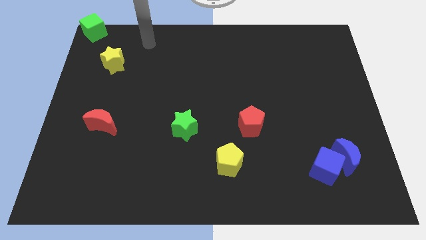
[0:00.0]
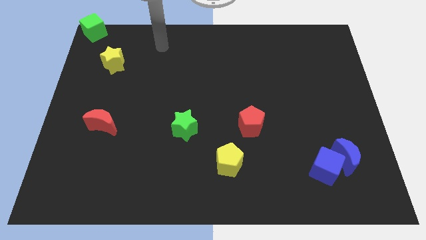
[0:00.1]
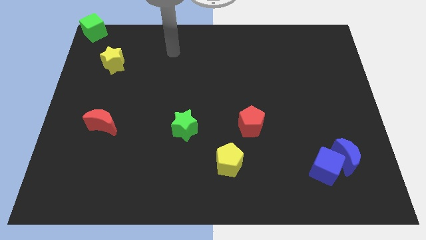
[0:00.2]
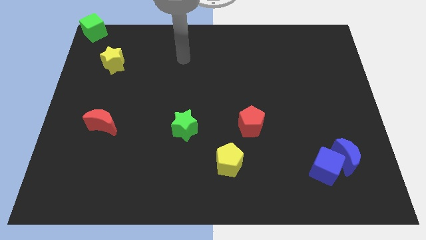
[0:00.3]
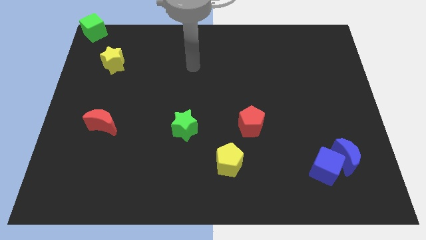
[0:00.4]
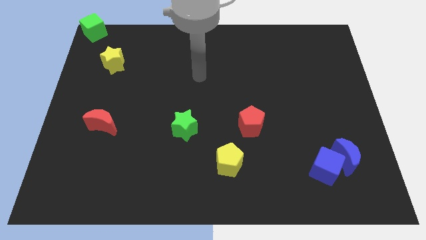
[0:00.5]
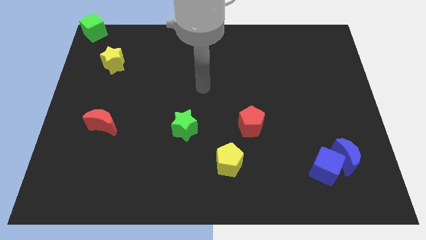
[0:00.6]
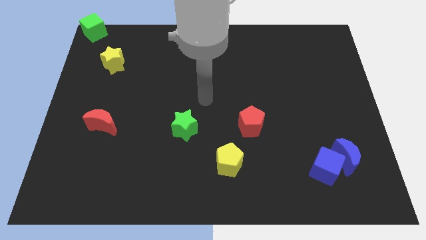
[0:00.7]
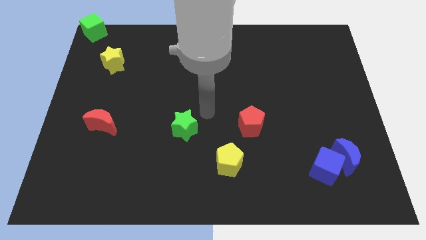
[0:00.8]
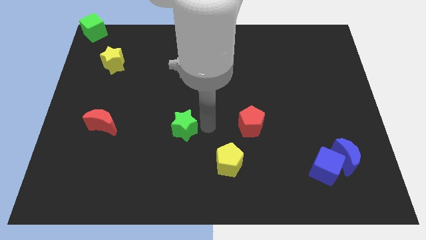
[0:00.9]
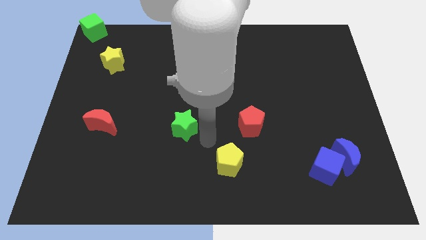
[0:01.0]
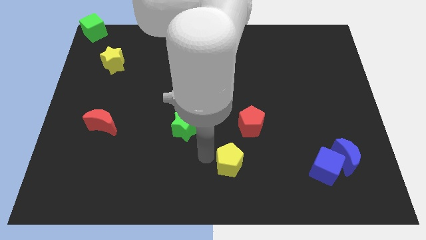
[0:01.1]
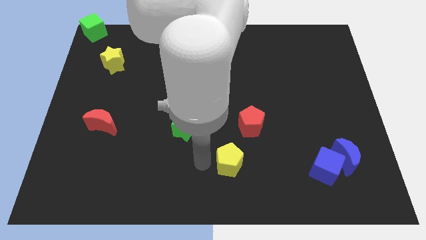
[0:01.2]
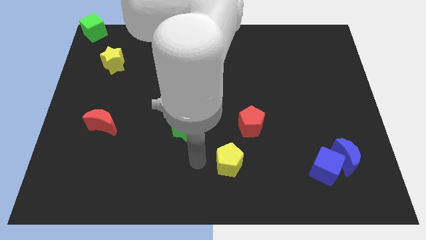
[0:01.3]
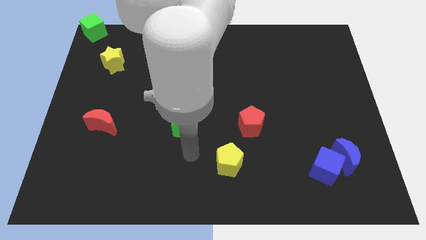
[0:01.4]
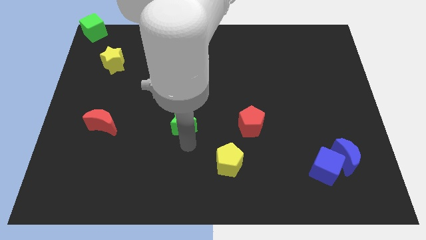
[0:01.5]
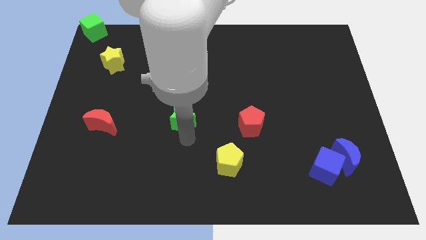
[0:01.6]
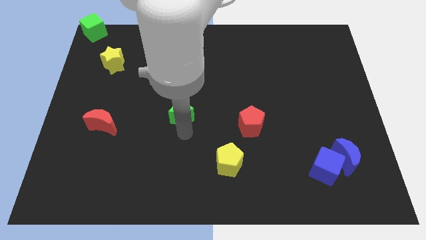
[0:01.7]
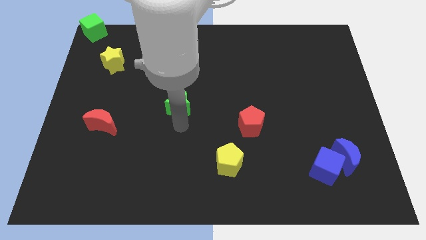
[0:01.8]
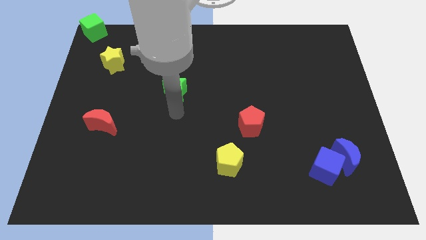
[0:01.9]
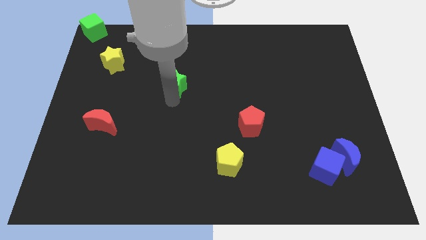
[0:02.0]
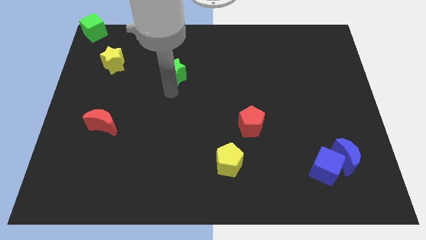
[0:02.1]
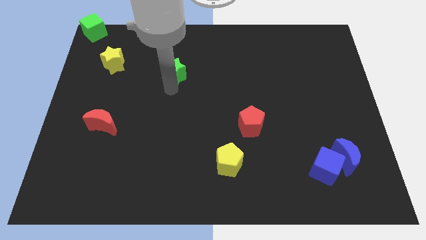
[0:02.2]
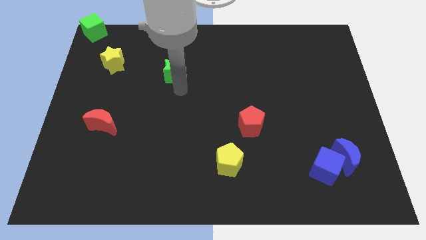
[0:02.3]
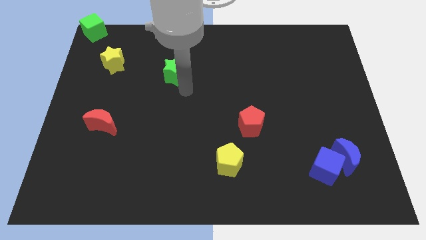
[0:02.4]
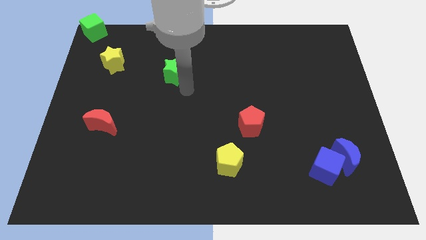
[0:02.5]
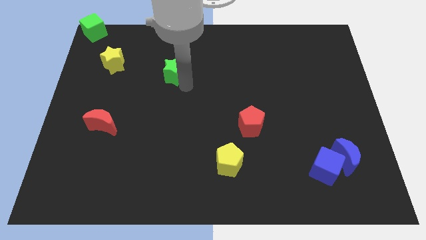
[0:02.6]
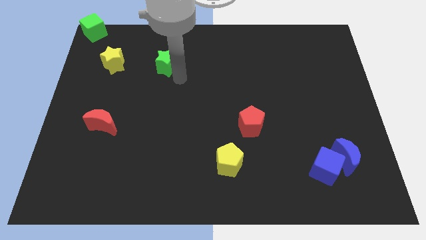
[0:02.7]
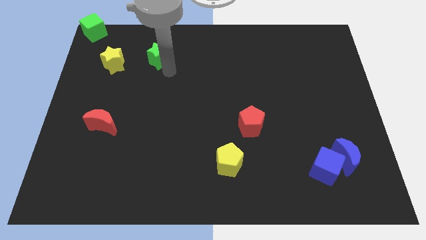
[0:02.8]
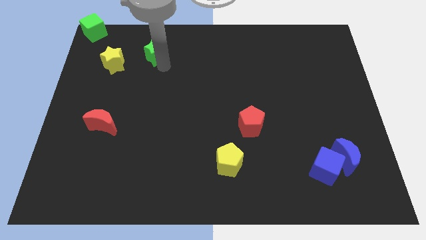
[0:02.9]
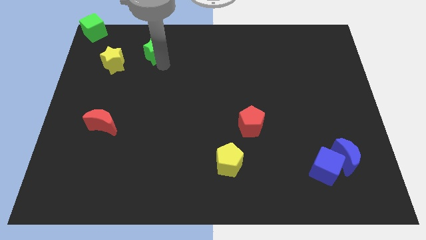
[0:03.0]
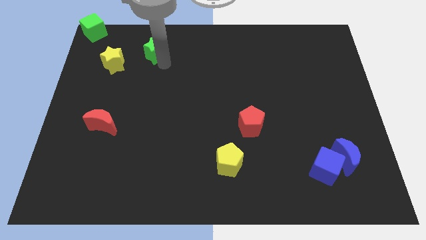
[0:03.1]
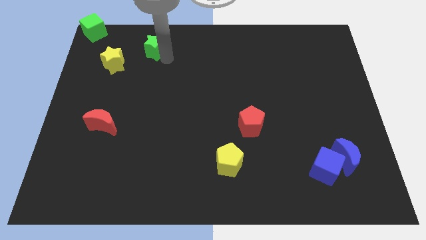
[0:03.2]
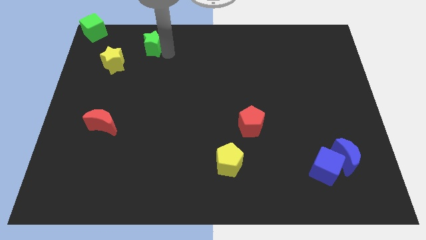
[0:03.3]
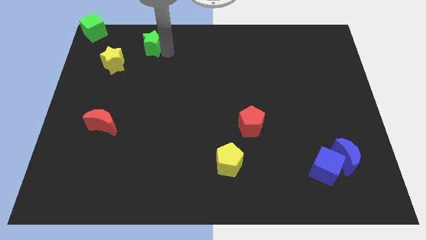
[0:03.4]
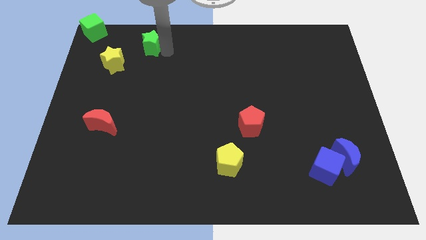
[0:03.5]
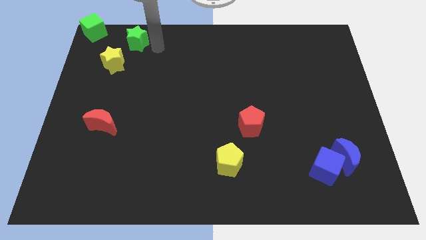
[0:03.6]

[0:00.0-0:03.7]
move the green star diagonally on the top right side of the yellow star

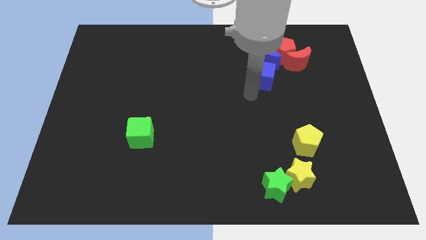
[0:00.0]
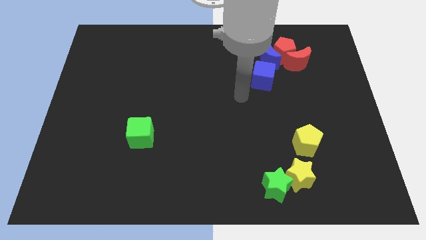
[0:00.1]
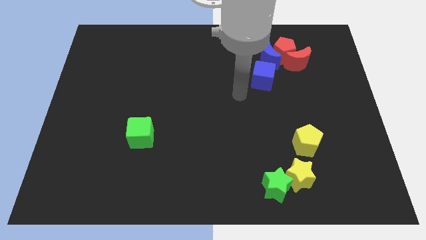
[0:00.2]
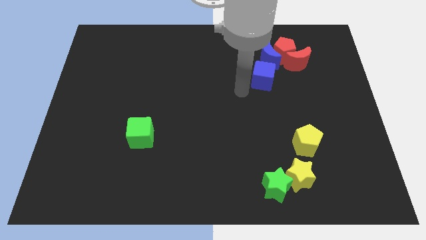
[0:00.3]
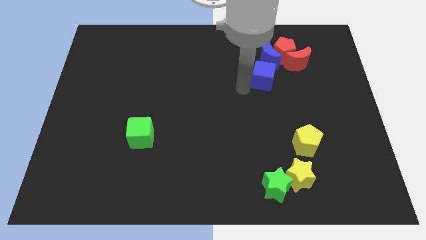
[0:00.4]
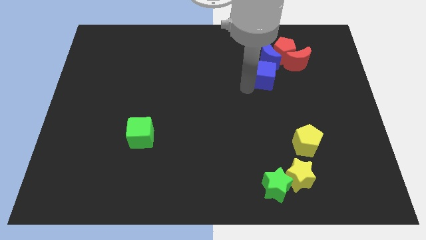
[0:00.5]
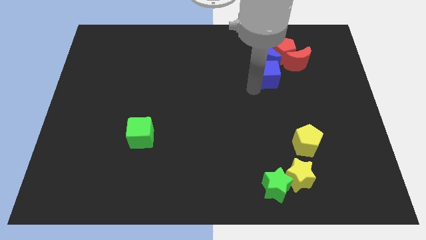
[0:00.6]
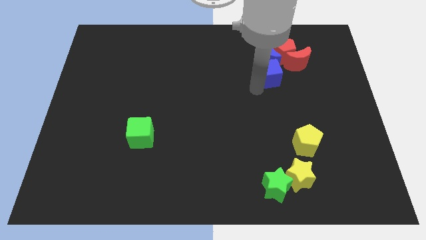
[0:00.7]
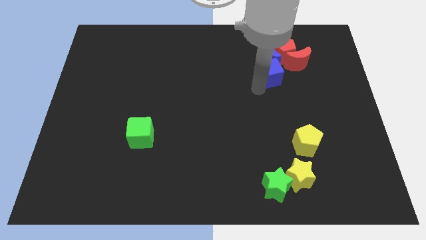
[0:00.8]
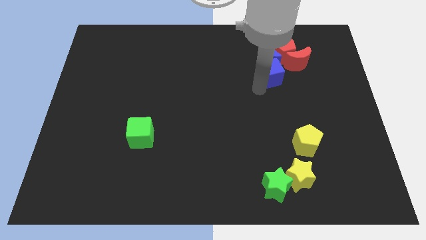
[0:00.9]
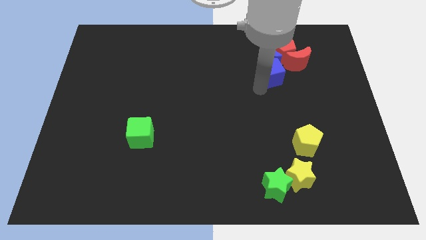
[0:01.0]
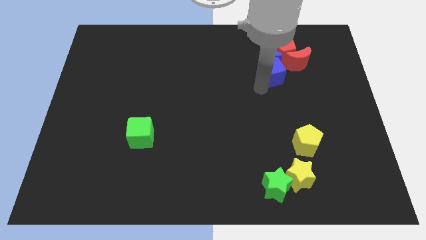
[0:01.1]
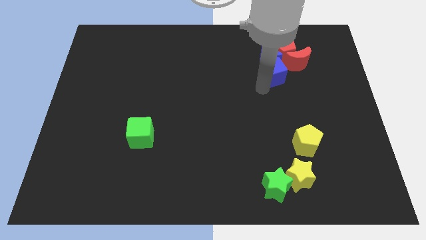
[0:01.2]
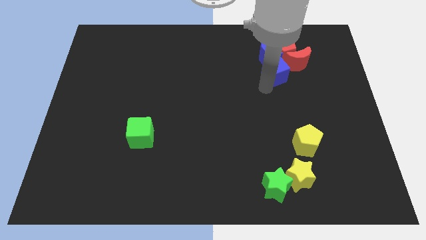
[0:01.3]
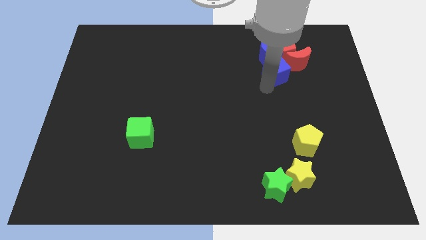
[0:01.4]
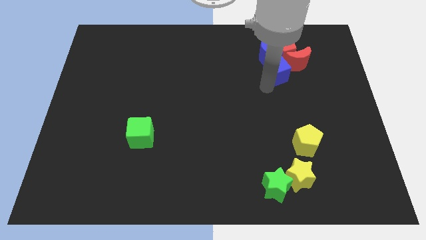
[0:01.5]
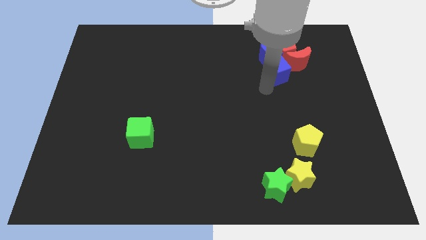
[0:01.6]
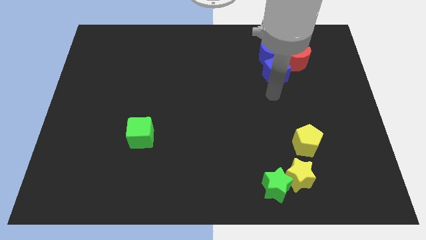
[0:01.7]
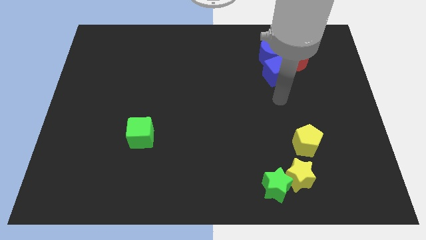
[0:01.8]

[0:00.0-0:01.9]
push blue cube into the blue crescent

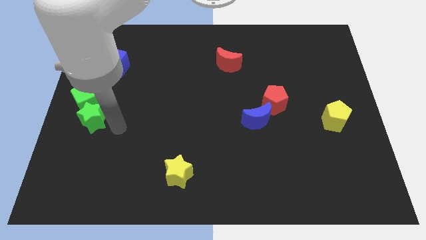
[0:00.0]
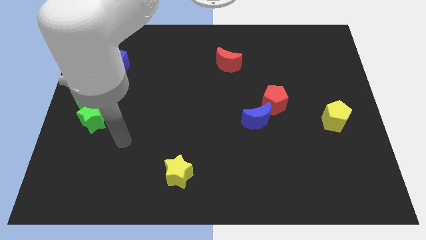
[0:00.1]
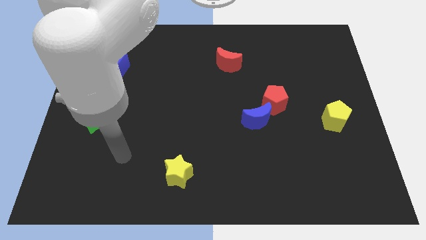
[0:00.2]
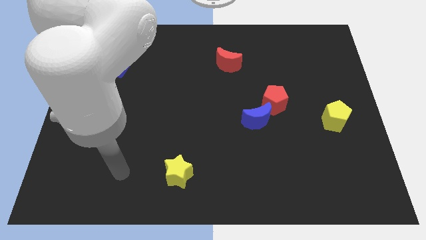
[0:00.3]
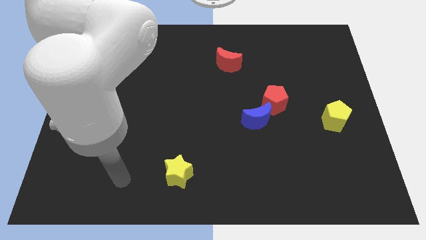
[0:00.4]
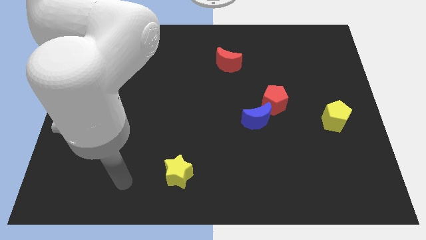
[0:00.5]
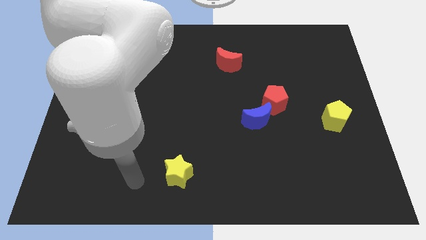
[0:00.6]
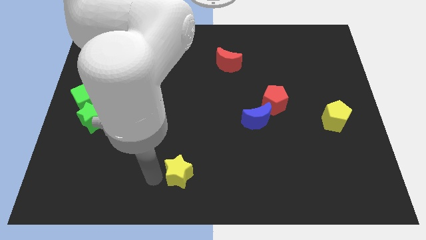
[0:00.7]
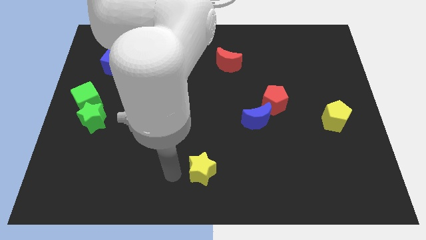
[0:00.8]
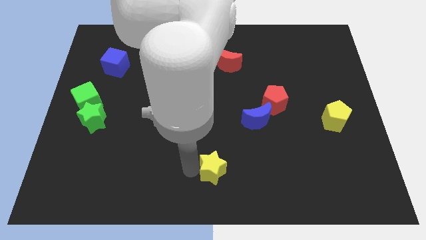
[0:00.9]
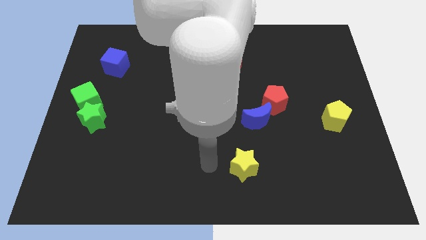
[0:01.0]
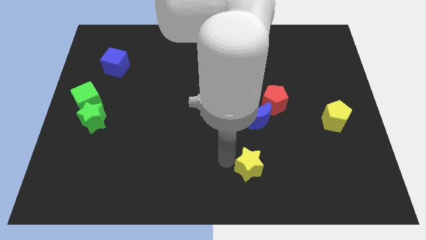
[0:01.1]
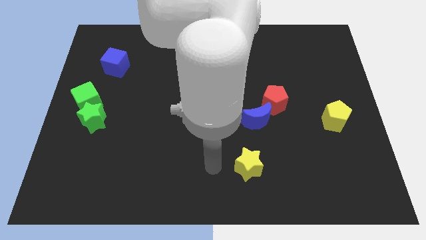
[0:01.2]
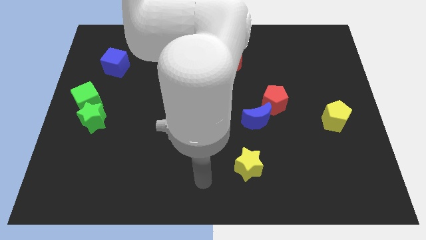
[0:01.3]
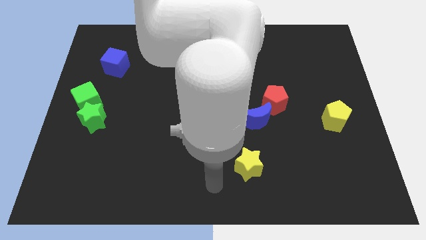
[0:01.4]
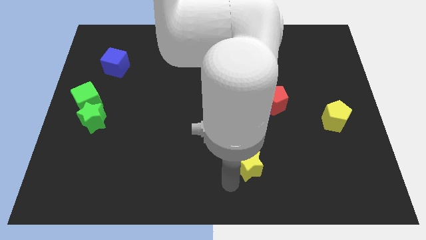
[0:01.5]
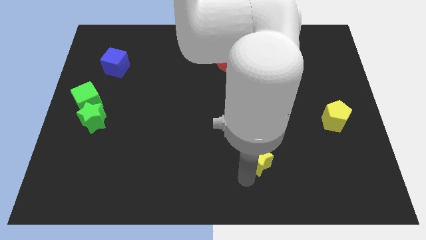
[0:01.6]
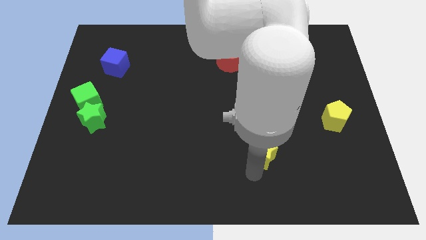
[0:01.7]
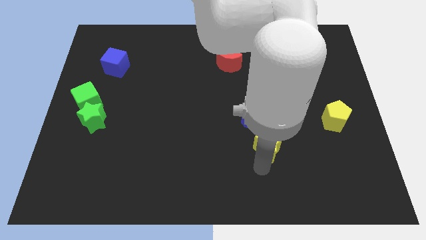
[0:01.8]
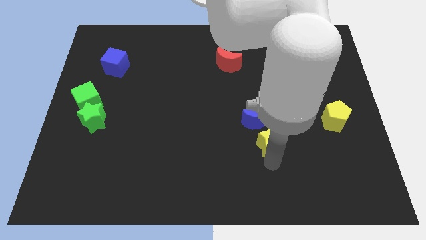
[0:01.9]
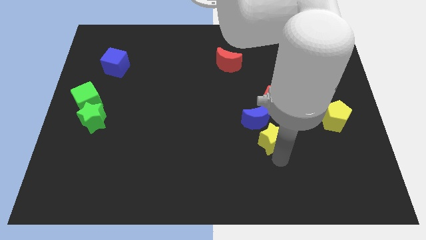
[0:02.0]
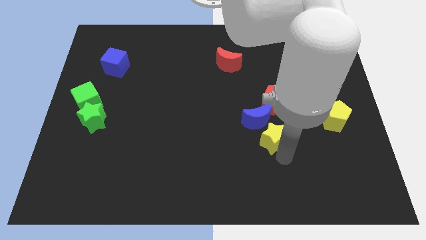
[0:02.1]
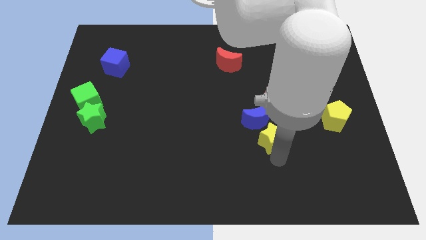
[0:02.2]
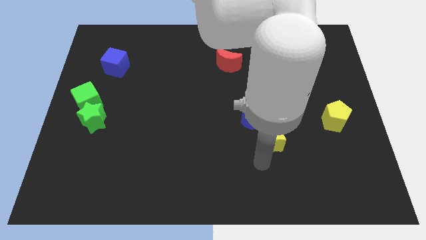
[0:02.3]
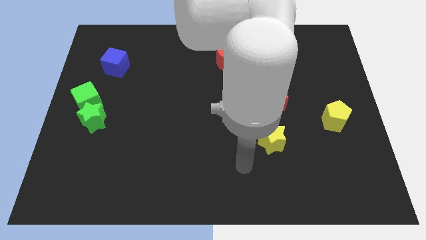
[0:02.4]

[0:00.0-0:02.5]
place the yellow star below the blue crescent

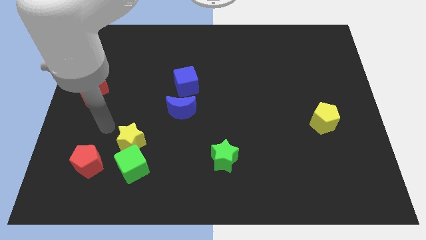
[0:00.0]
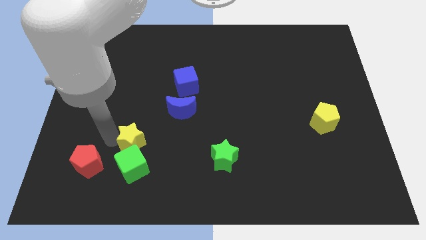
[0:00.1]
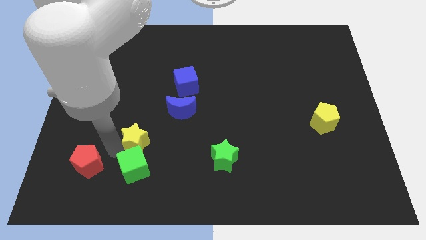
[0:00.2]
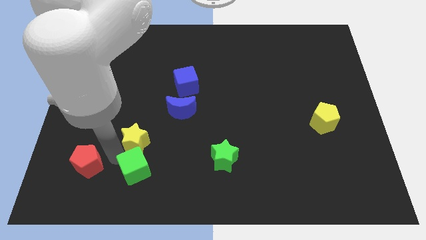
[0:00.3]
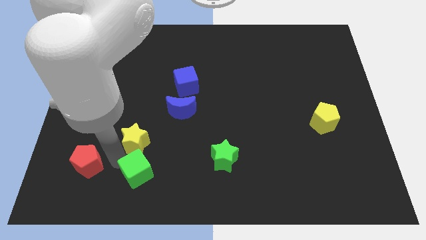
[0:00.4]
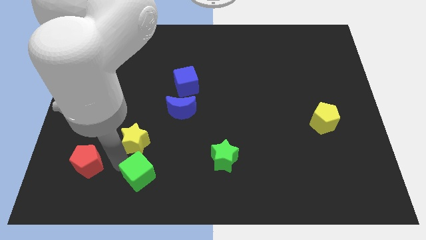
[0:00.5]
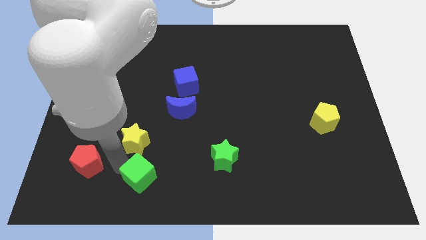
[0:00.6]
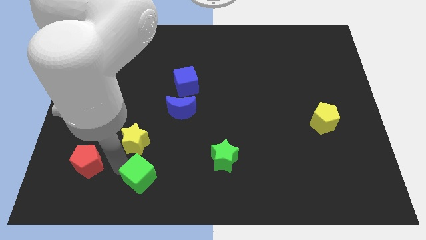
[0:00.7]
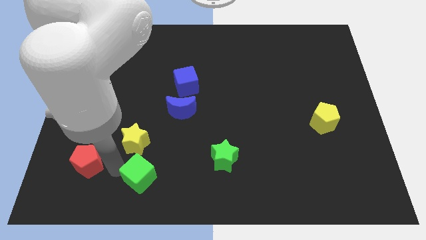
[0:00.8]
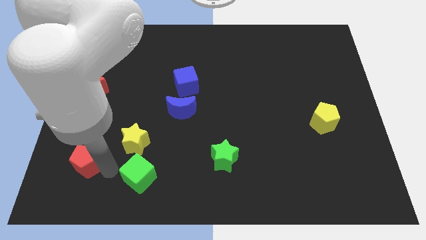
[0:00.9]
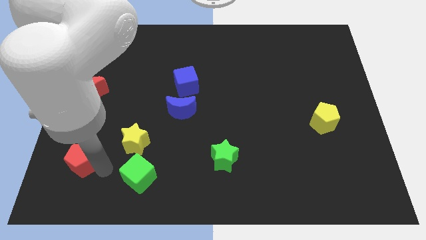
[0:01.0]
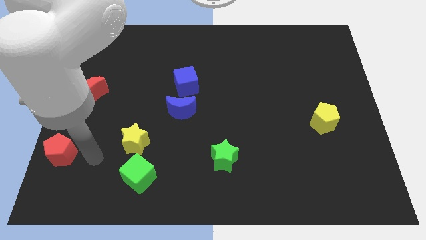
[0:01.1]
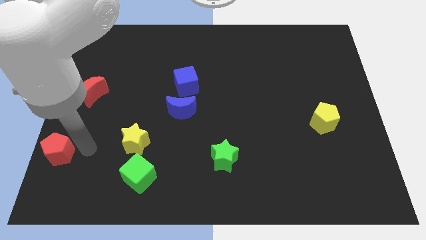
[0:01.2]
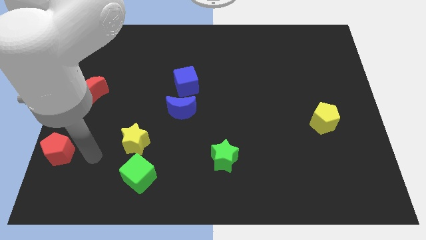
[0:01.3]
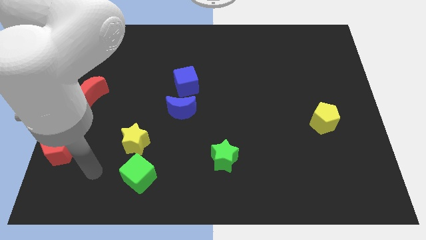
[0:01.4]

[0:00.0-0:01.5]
move the red pentagon bottom left
